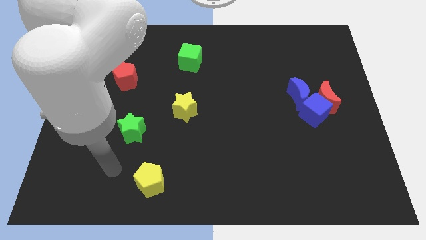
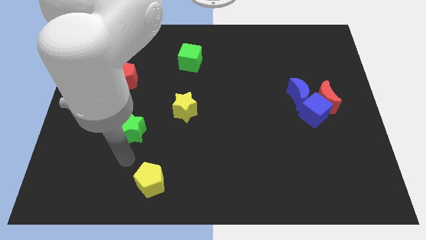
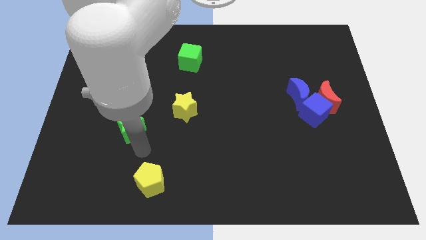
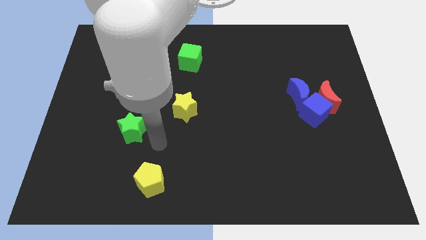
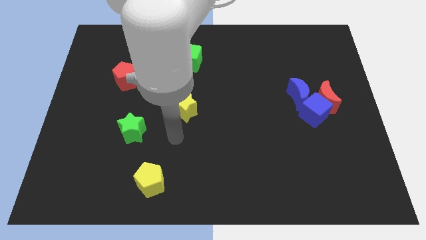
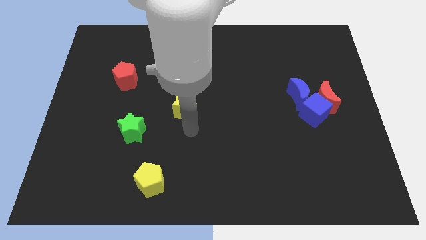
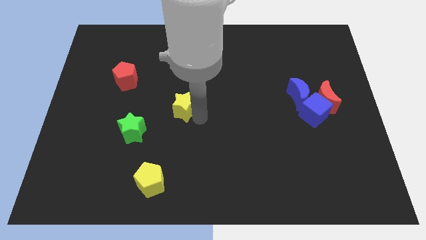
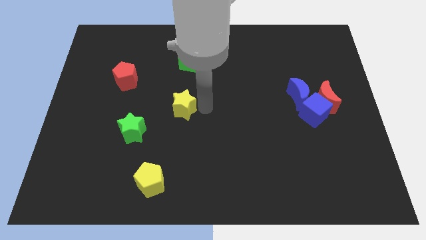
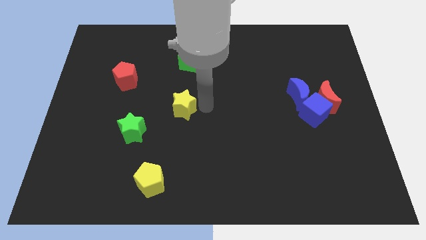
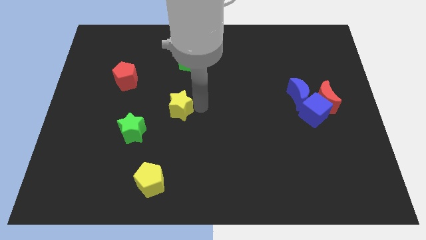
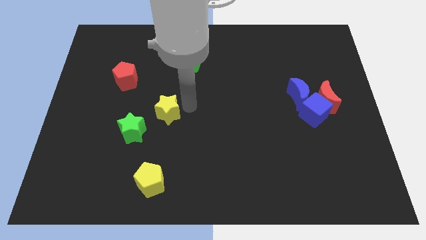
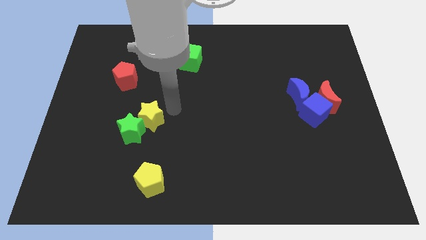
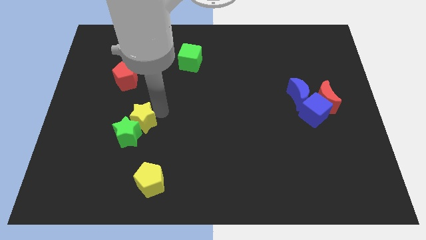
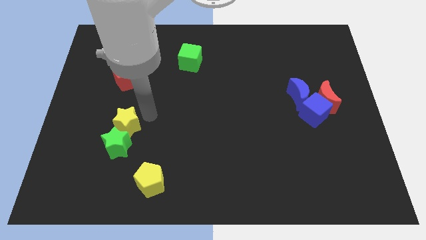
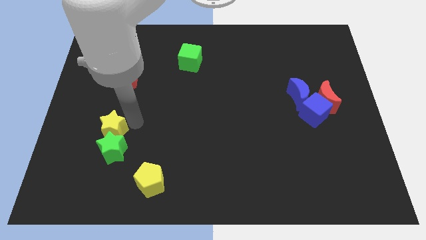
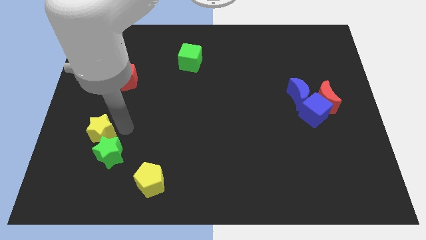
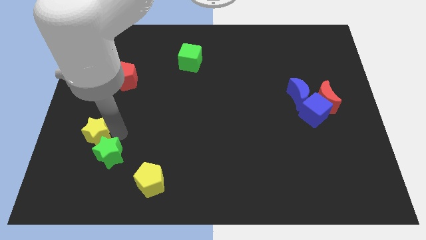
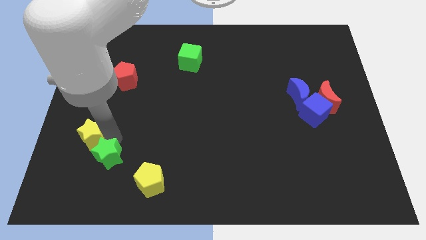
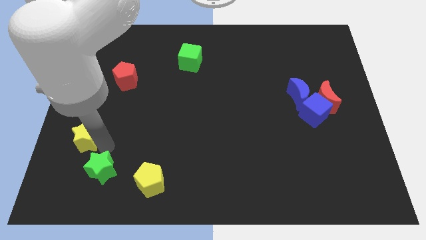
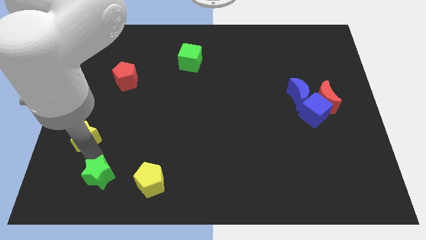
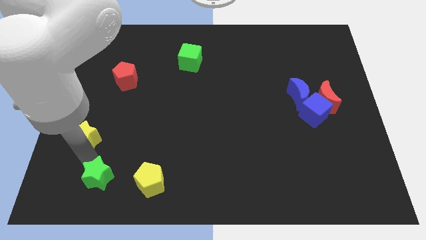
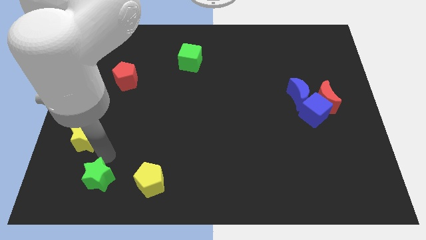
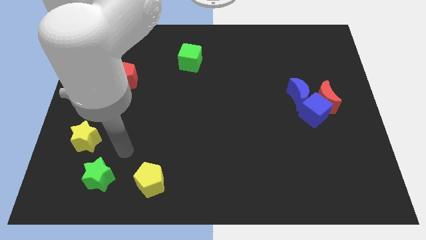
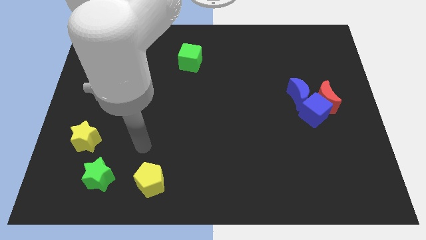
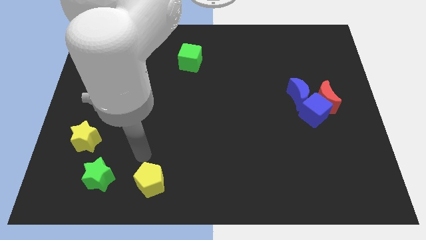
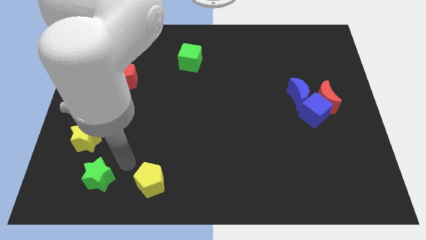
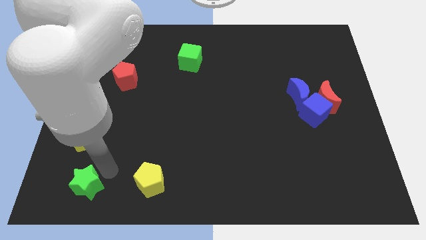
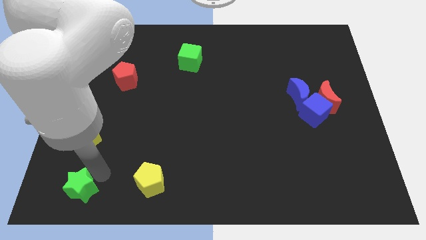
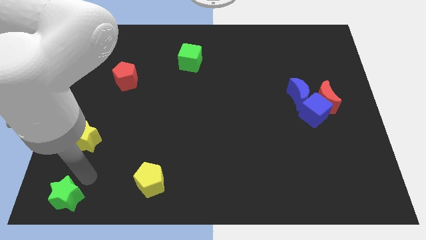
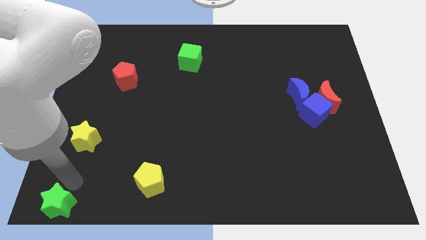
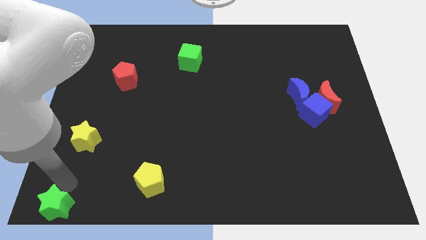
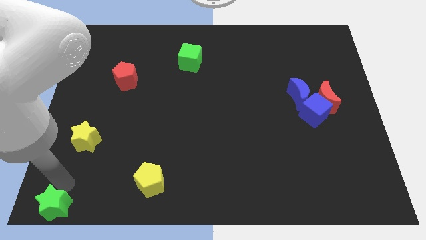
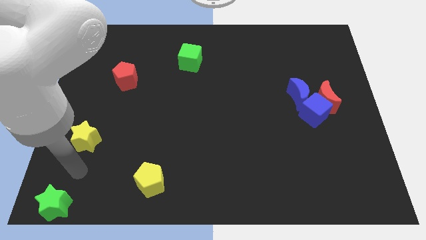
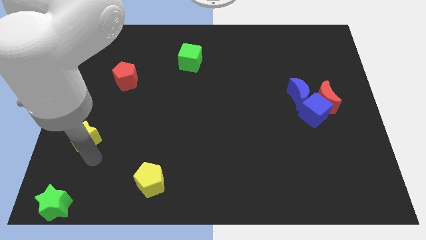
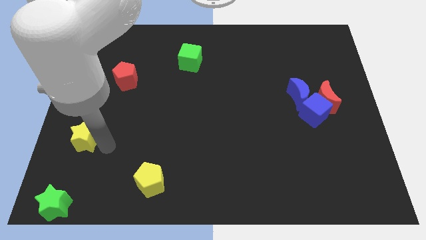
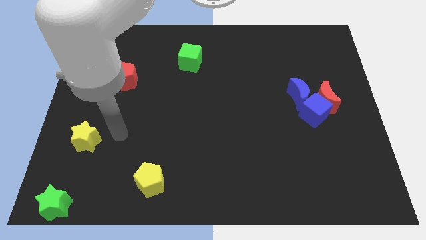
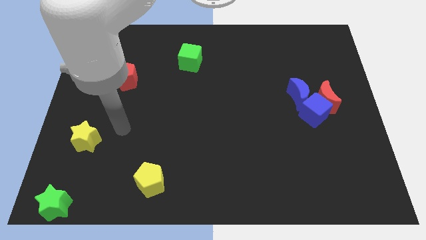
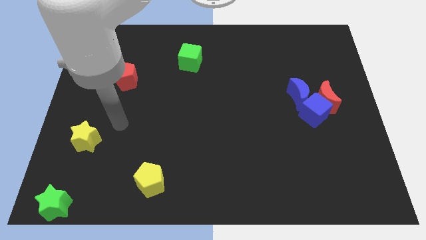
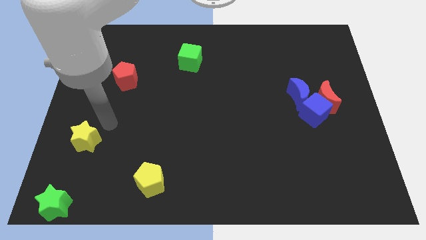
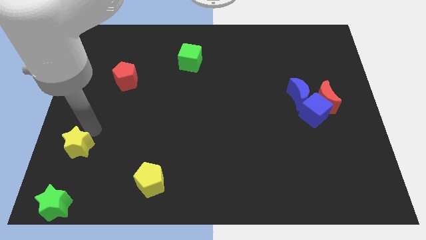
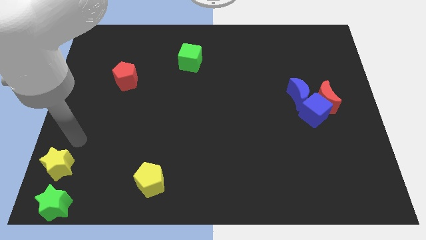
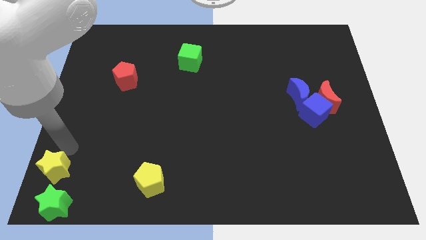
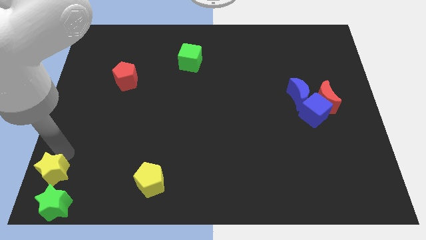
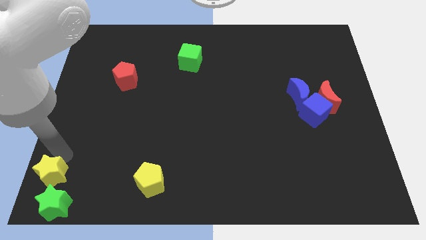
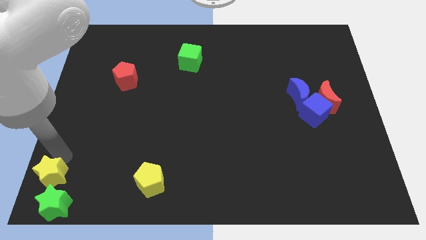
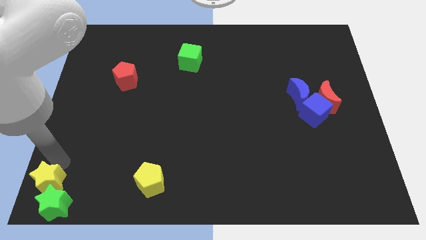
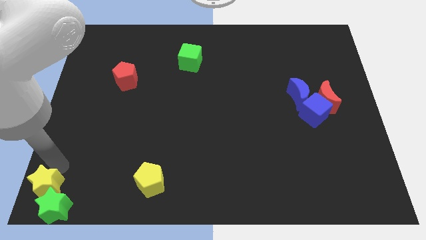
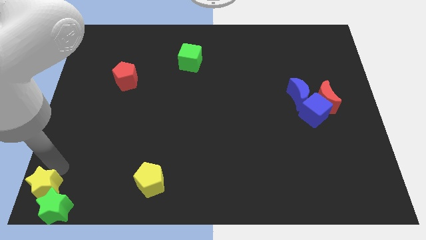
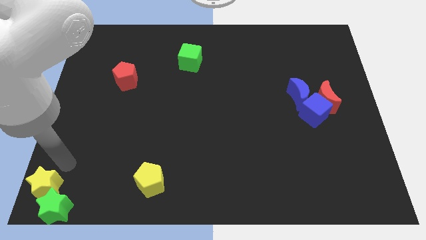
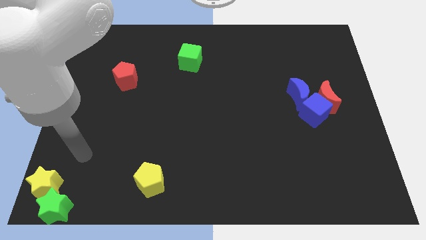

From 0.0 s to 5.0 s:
place both the stars to the bottom left corner of the board

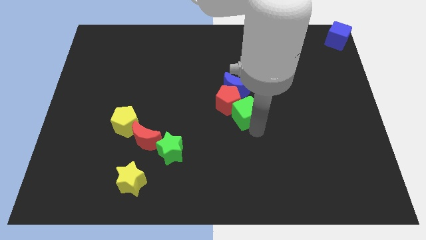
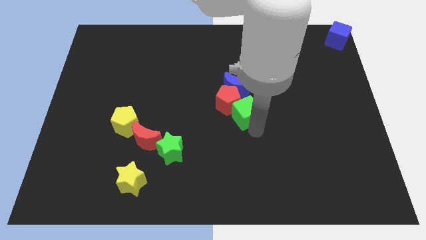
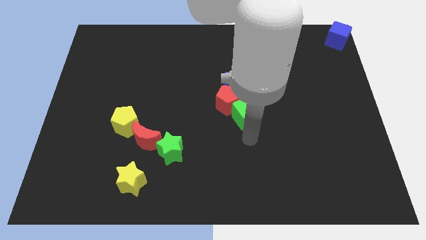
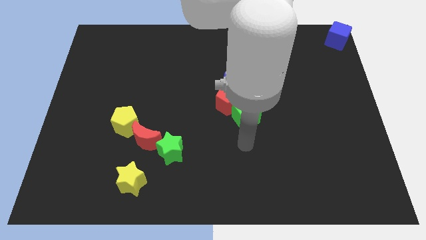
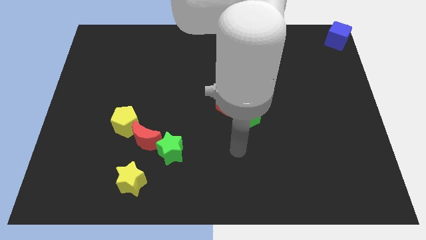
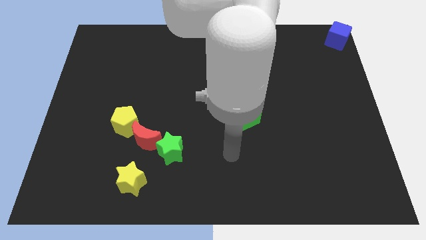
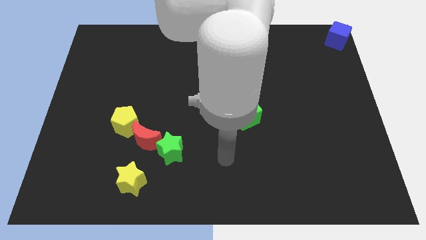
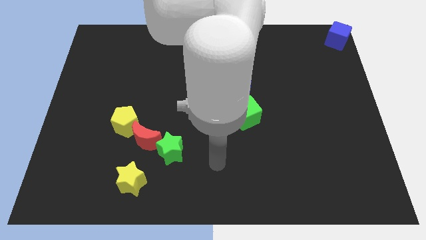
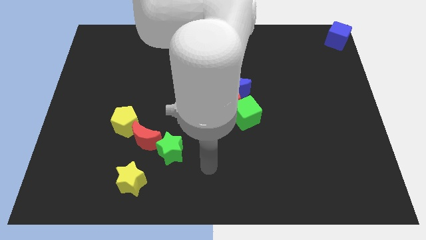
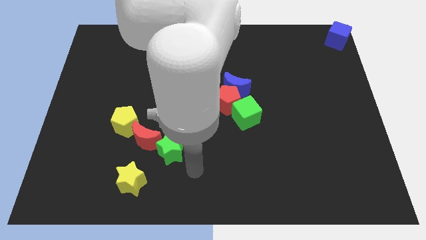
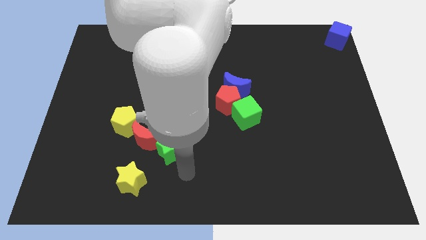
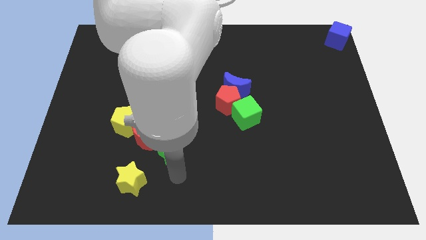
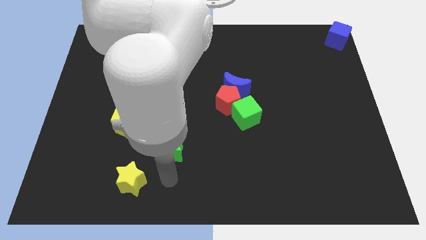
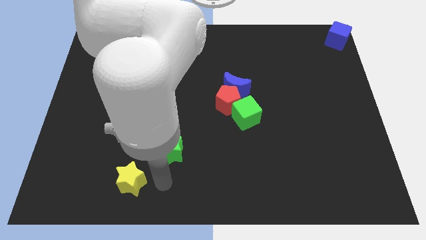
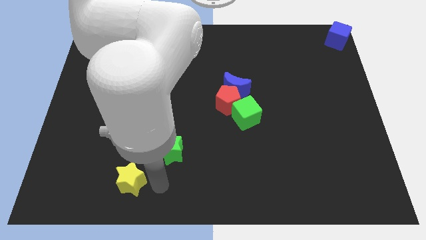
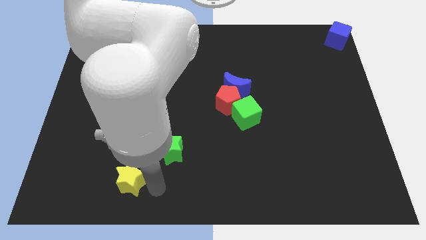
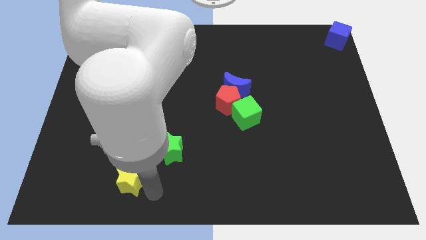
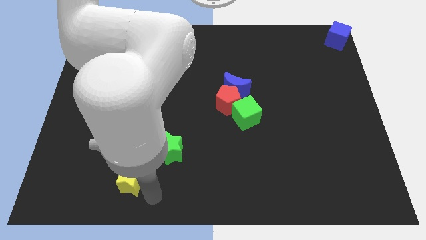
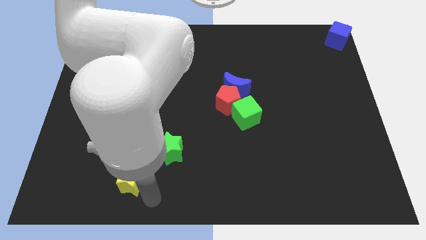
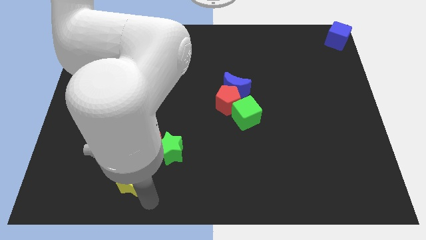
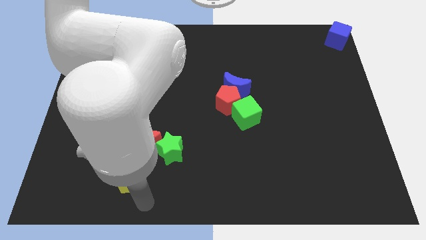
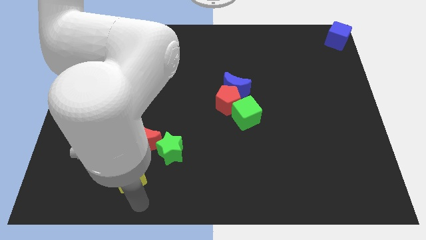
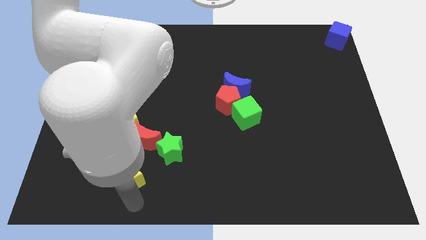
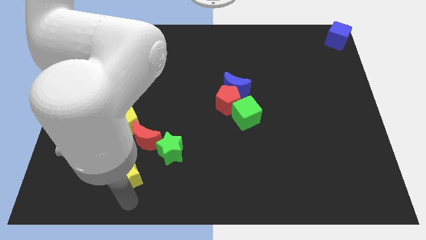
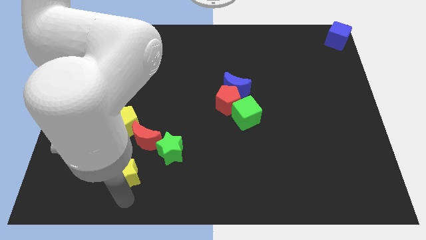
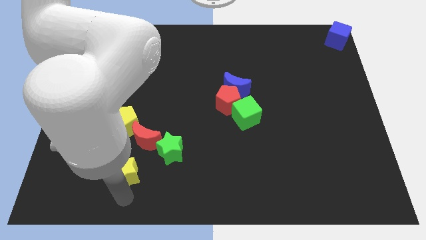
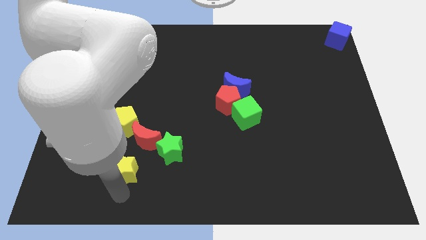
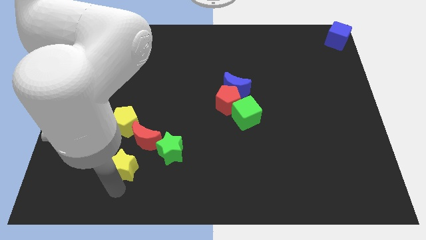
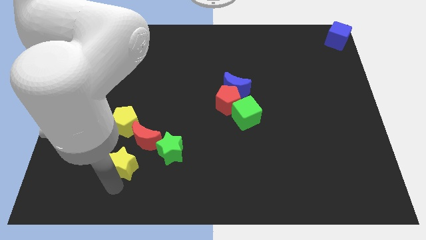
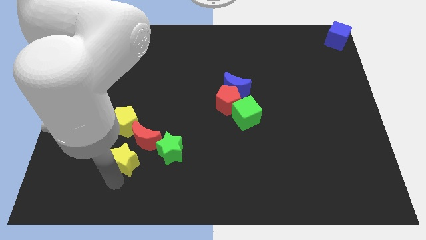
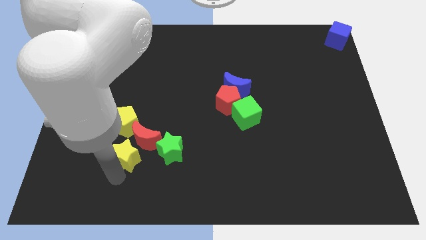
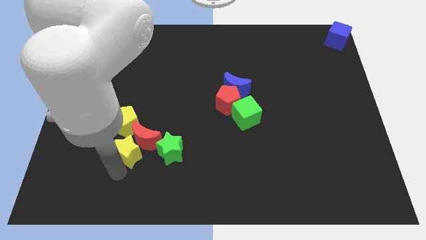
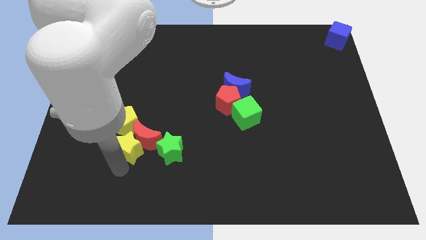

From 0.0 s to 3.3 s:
move yellow star near red moon

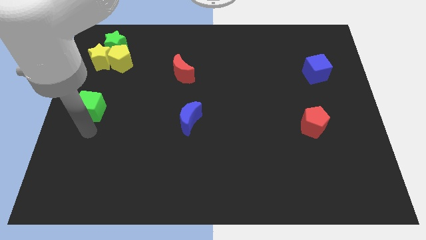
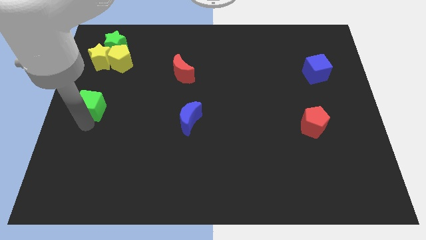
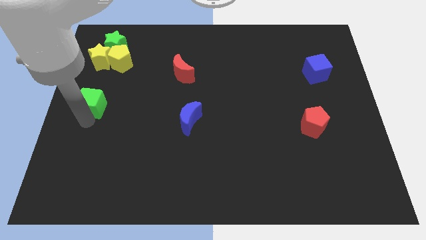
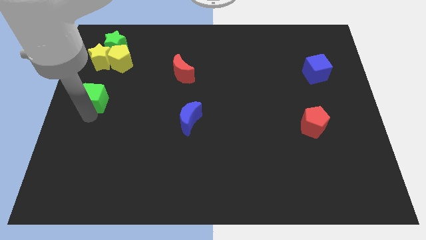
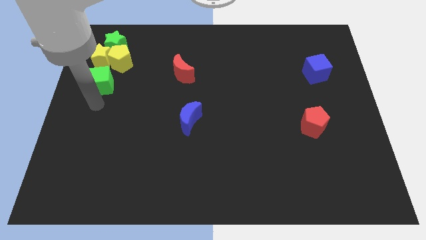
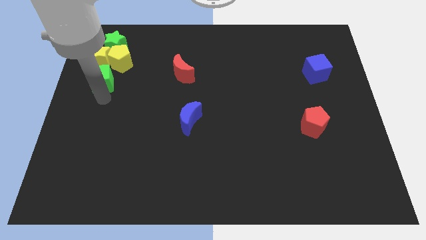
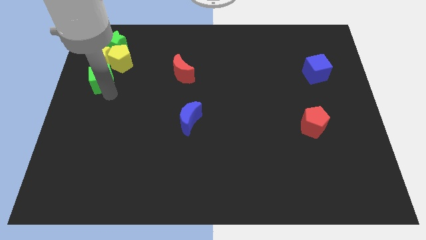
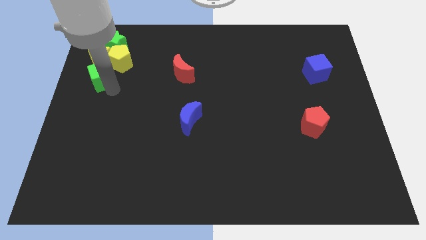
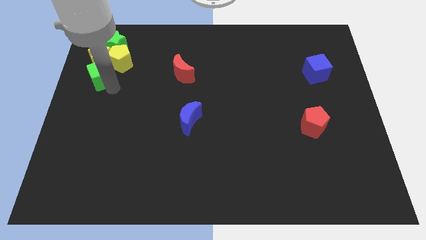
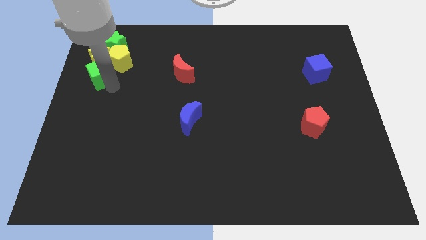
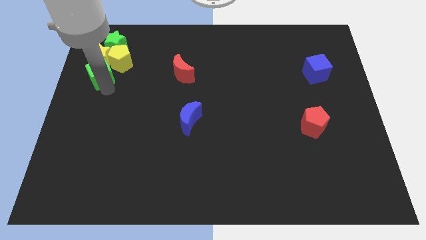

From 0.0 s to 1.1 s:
push the green cube close to the group of blocks at the top left corner of the board
